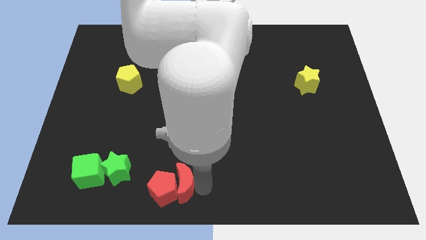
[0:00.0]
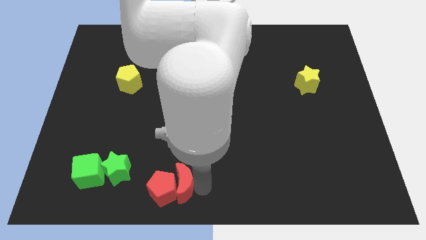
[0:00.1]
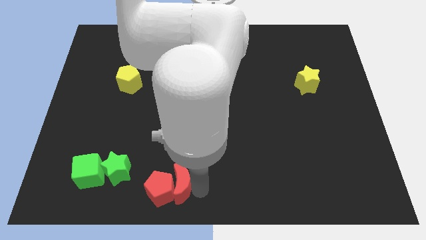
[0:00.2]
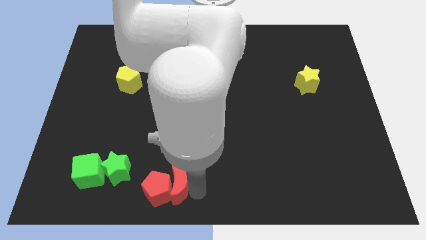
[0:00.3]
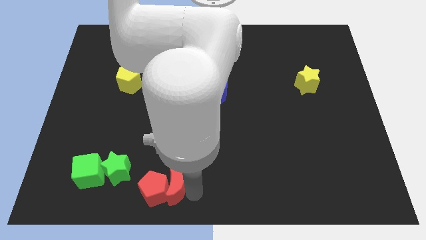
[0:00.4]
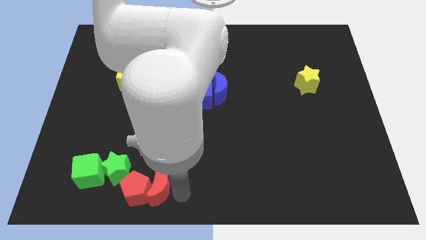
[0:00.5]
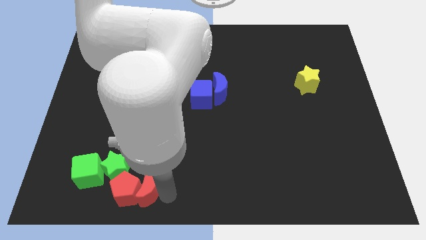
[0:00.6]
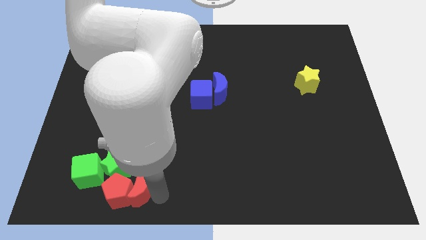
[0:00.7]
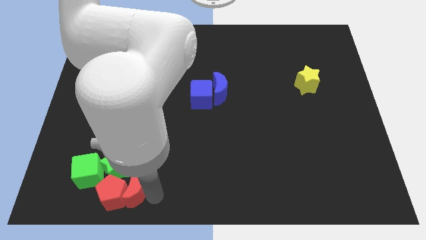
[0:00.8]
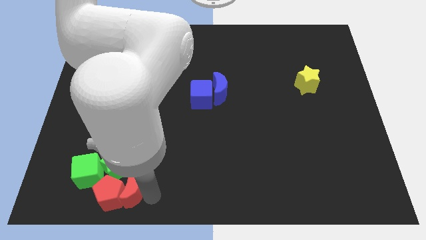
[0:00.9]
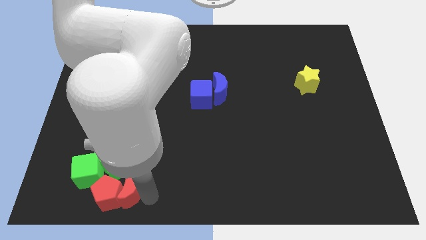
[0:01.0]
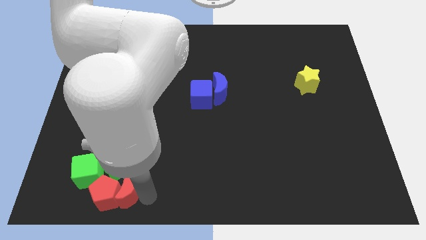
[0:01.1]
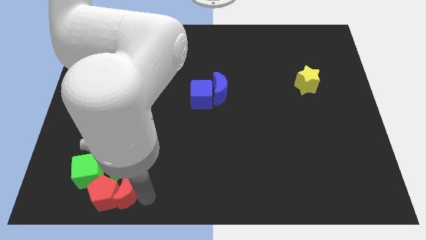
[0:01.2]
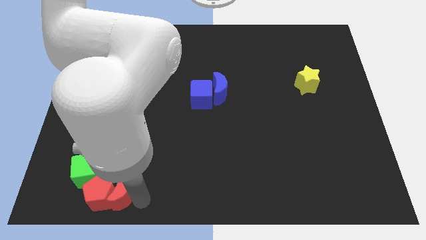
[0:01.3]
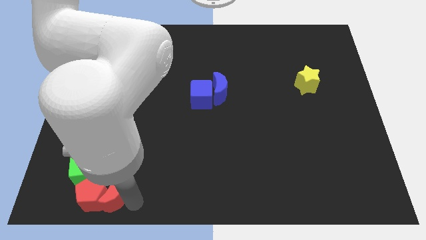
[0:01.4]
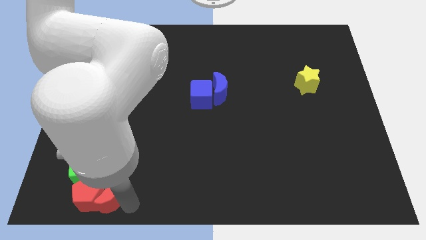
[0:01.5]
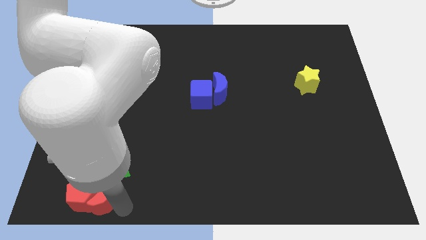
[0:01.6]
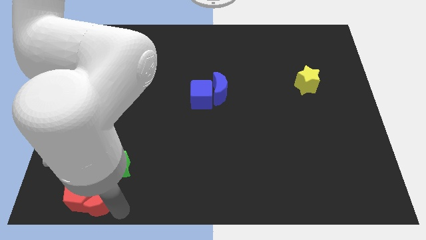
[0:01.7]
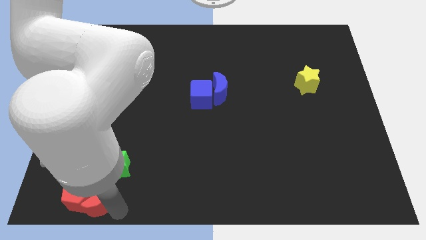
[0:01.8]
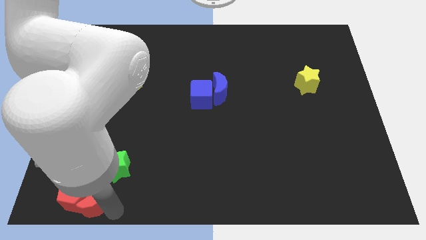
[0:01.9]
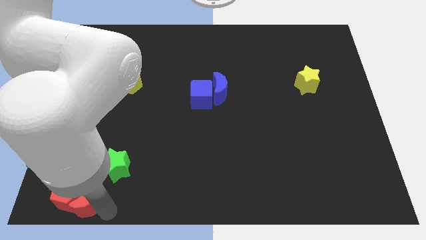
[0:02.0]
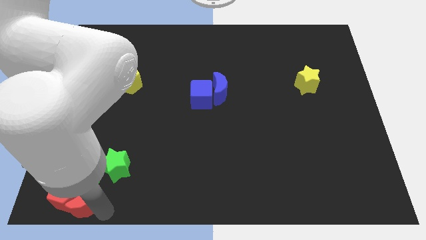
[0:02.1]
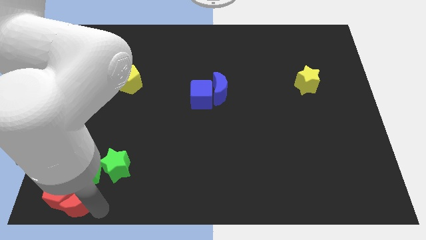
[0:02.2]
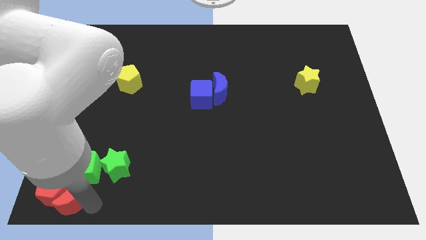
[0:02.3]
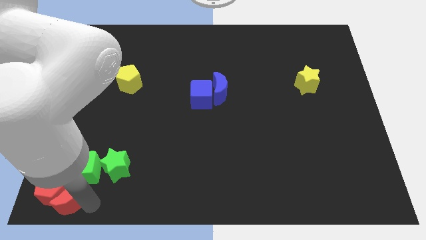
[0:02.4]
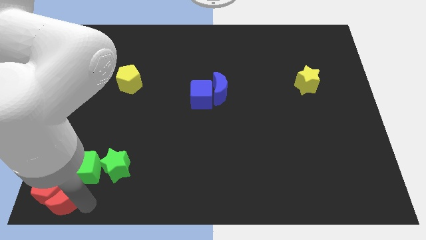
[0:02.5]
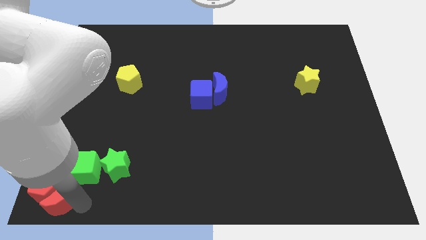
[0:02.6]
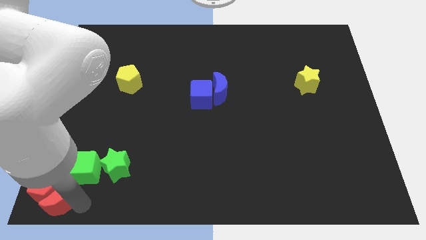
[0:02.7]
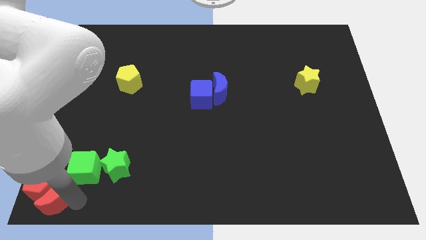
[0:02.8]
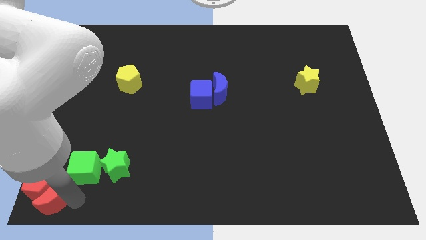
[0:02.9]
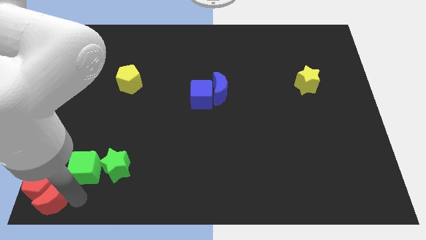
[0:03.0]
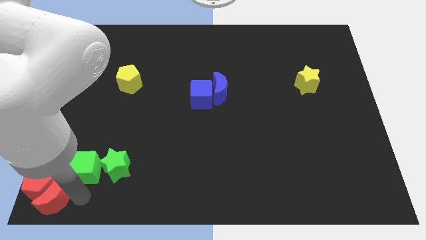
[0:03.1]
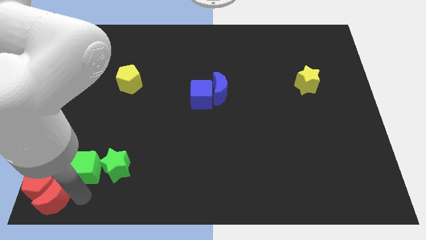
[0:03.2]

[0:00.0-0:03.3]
move the red blocks into the bottom left corner

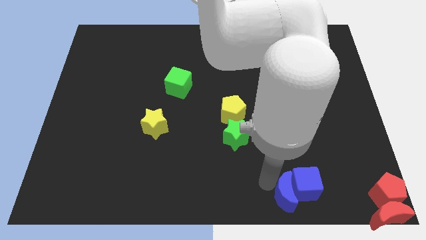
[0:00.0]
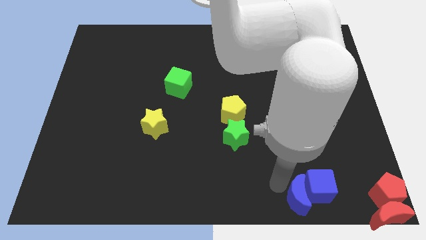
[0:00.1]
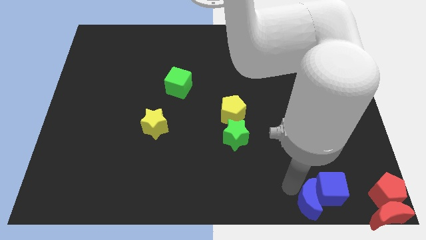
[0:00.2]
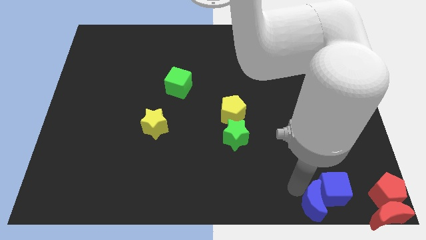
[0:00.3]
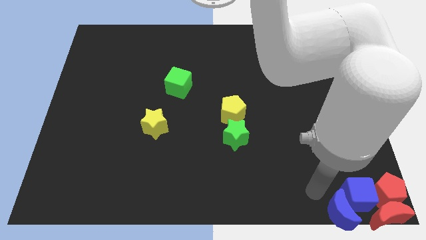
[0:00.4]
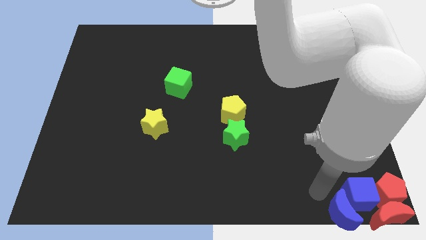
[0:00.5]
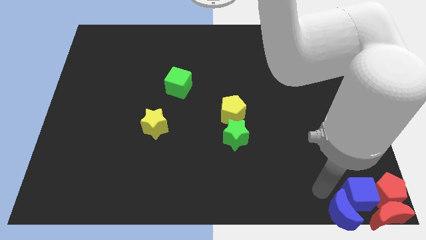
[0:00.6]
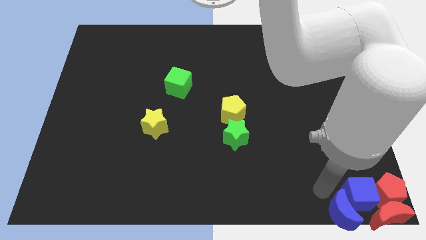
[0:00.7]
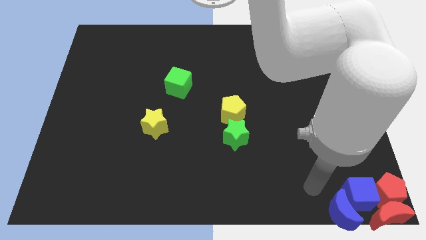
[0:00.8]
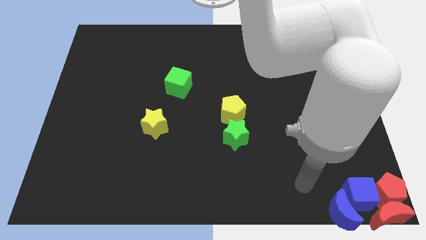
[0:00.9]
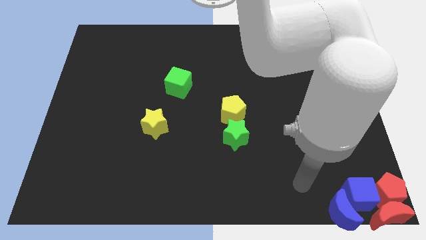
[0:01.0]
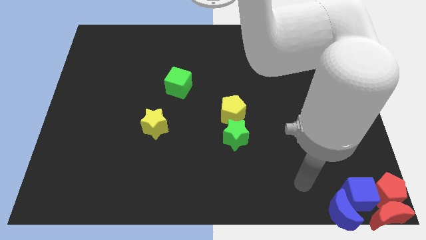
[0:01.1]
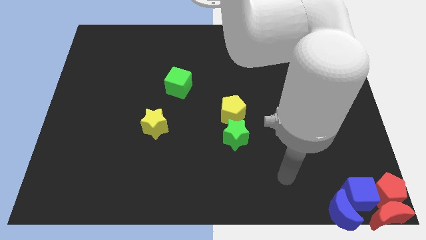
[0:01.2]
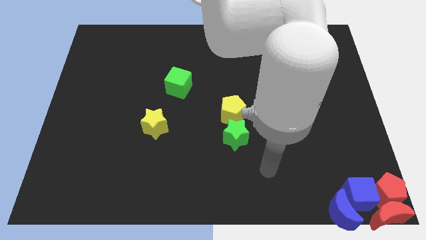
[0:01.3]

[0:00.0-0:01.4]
place the blue blocks with the blue crescent to the bottom right of the board

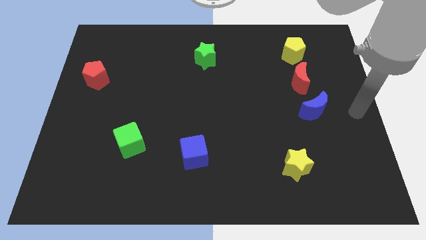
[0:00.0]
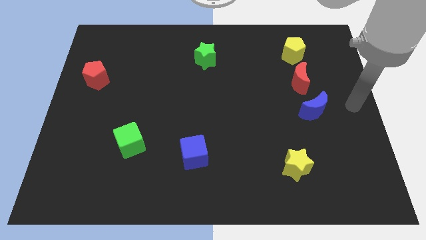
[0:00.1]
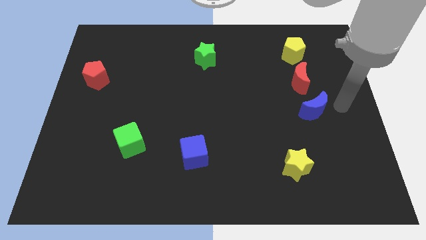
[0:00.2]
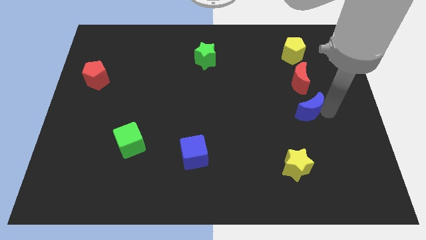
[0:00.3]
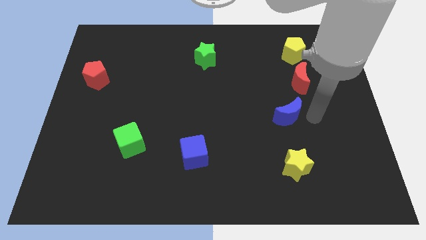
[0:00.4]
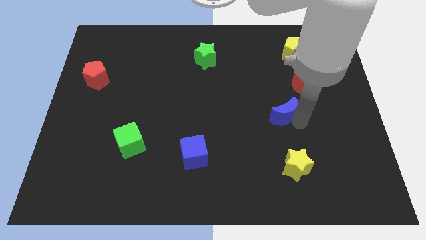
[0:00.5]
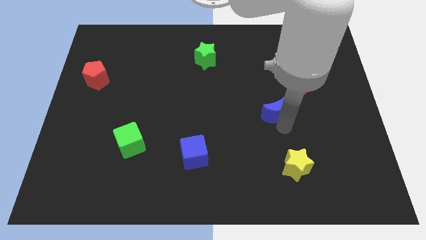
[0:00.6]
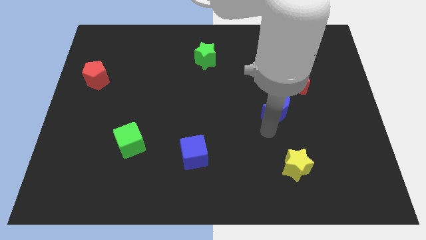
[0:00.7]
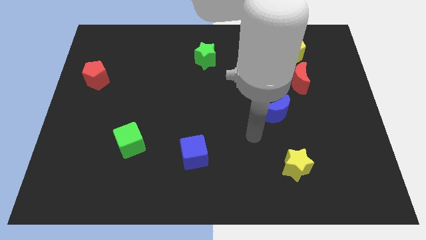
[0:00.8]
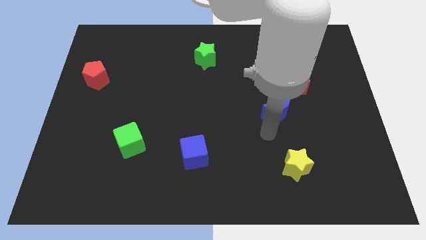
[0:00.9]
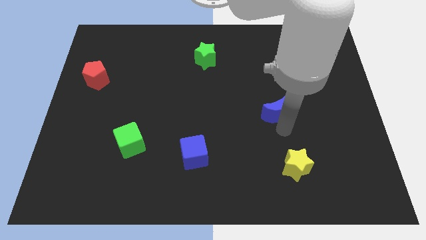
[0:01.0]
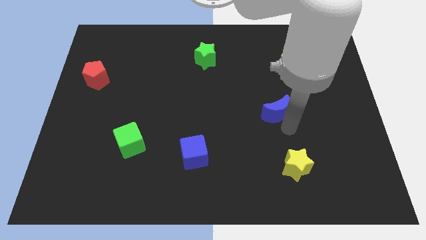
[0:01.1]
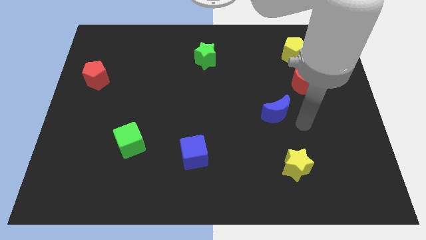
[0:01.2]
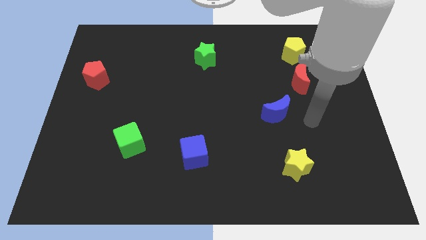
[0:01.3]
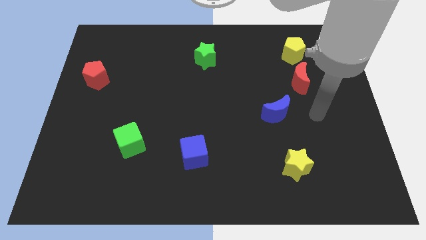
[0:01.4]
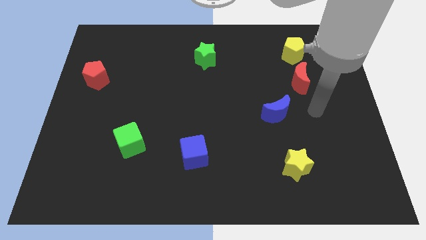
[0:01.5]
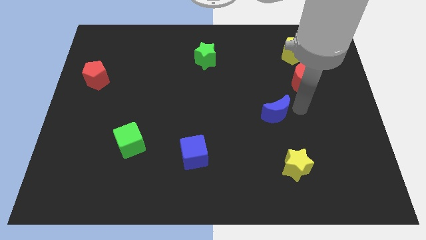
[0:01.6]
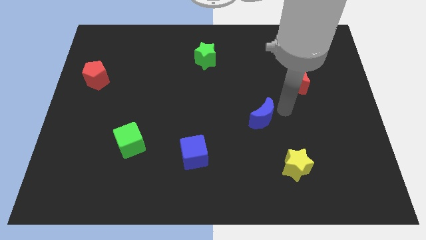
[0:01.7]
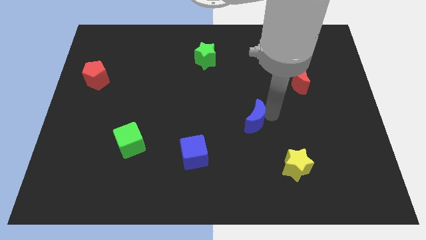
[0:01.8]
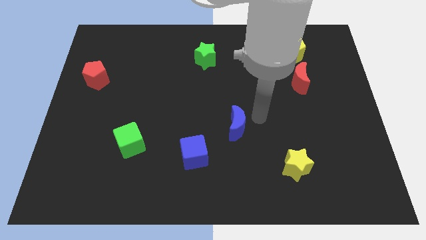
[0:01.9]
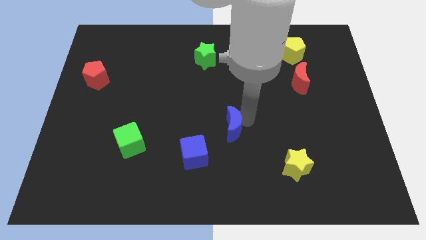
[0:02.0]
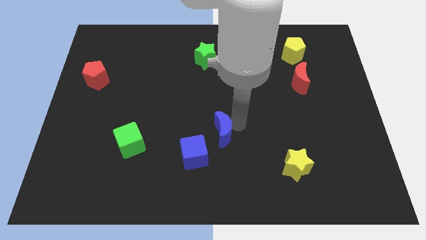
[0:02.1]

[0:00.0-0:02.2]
push the blue moon towards the center of board

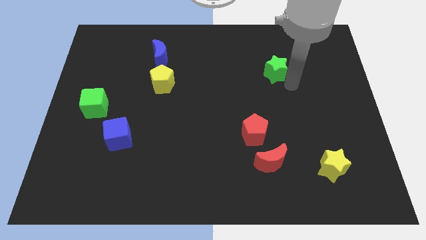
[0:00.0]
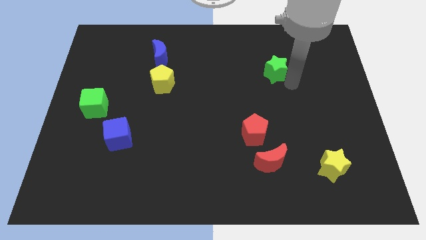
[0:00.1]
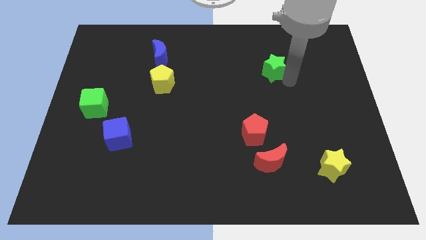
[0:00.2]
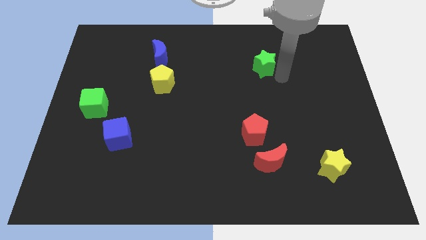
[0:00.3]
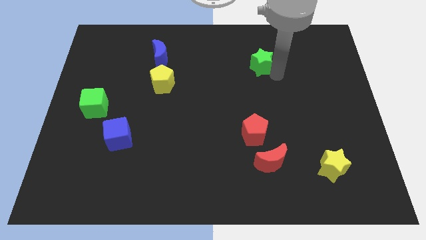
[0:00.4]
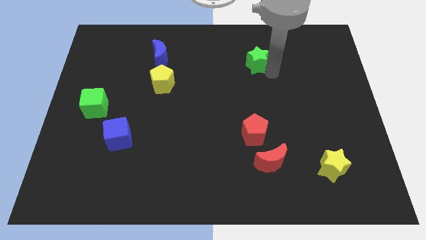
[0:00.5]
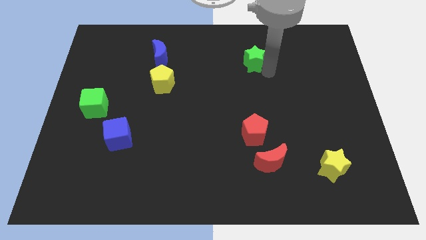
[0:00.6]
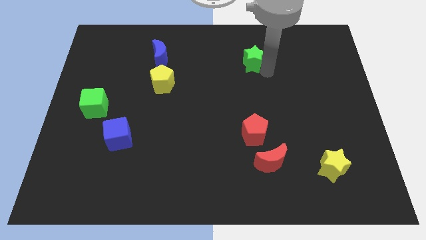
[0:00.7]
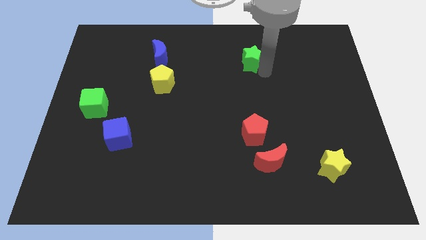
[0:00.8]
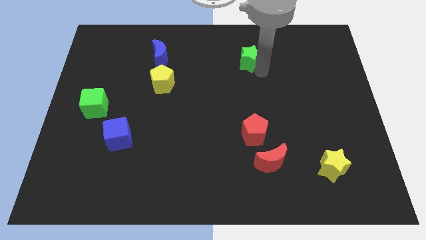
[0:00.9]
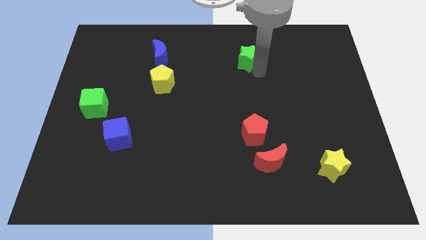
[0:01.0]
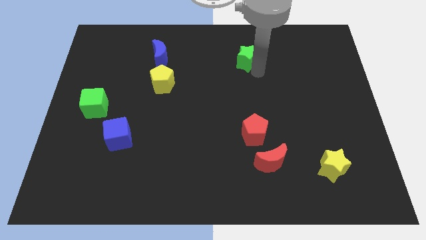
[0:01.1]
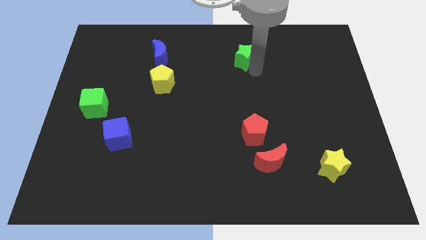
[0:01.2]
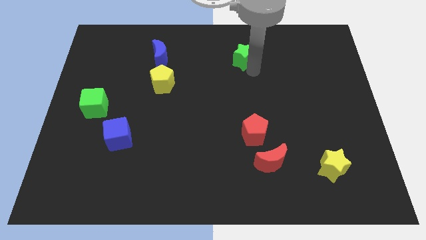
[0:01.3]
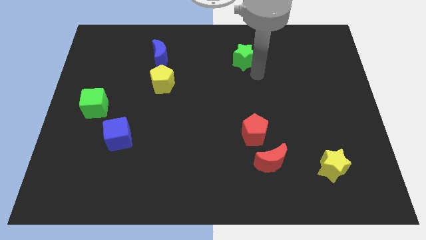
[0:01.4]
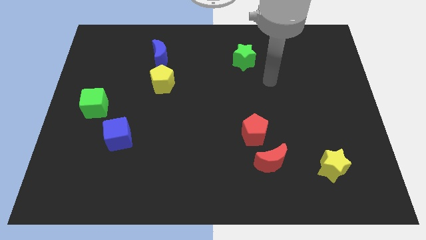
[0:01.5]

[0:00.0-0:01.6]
place green star to the top of red pentagon

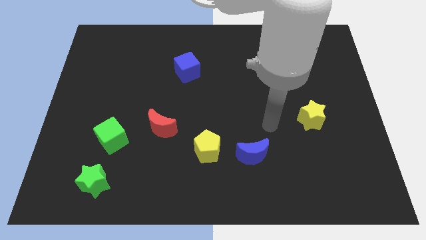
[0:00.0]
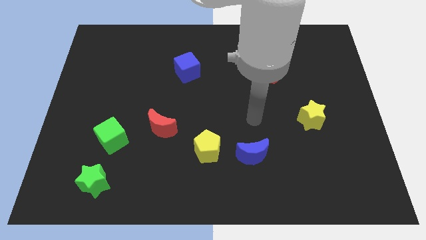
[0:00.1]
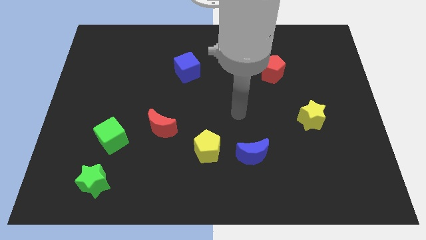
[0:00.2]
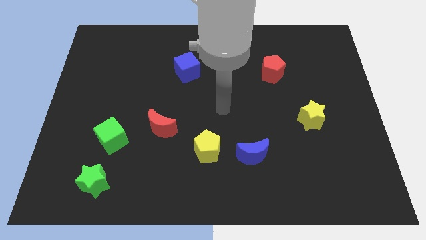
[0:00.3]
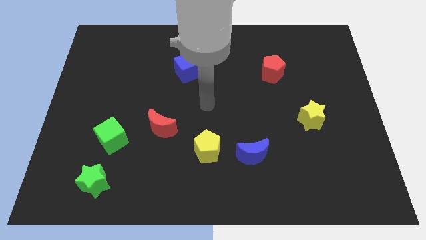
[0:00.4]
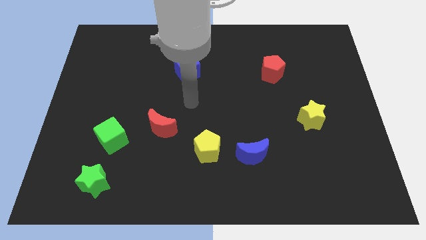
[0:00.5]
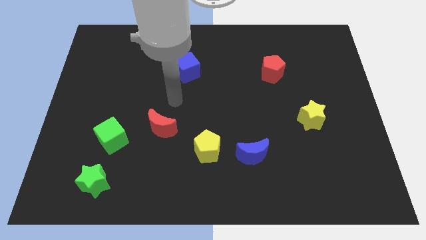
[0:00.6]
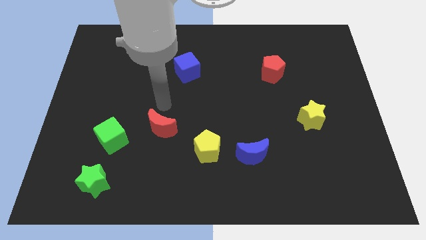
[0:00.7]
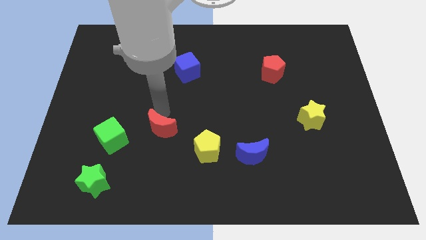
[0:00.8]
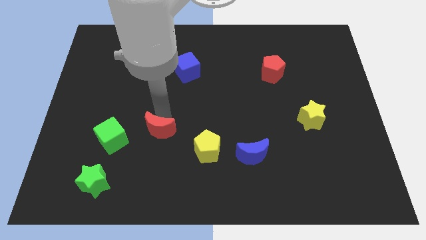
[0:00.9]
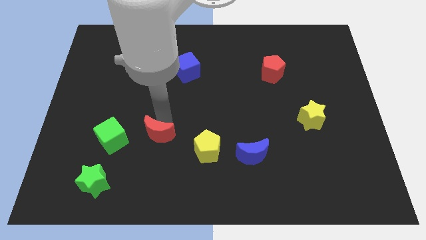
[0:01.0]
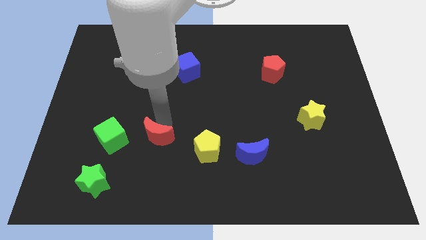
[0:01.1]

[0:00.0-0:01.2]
move red moon slightly down
